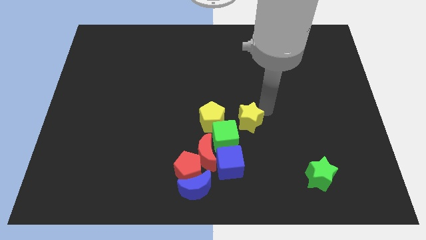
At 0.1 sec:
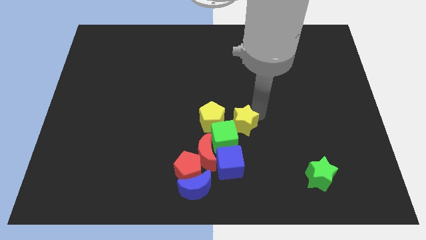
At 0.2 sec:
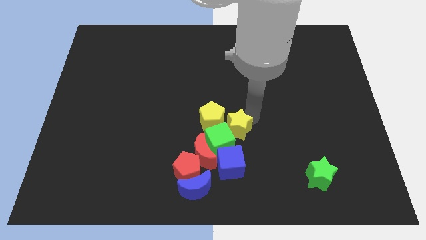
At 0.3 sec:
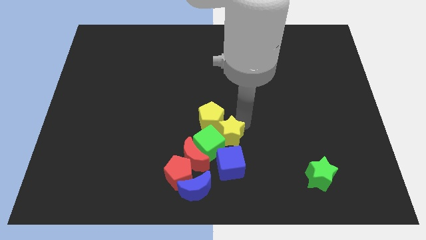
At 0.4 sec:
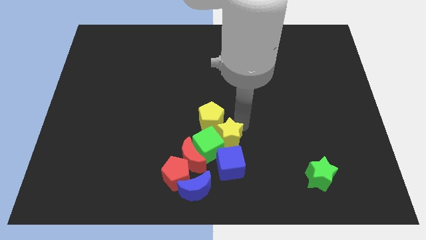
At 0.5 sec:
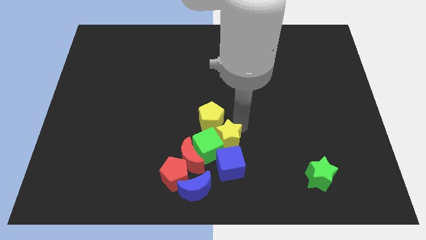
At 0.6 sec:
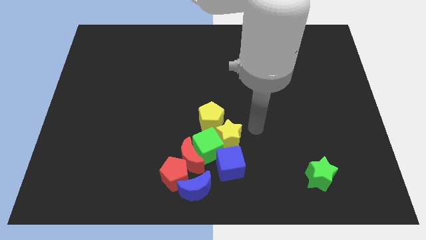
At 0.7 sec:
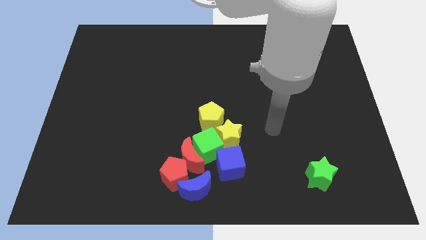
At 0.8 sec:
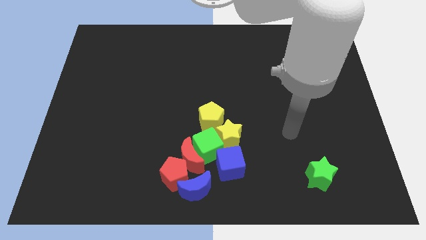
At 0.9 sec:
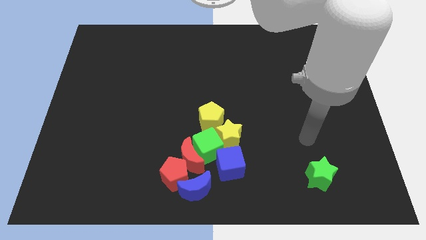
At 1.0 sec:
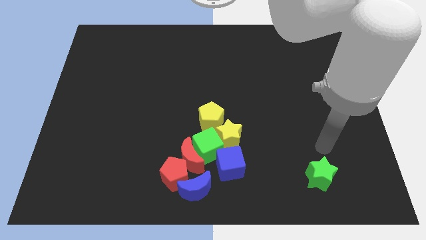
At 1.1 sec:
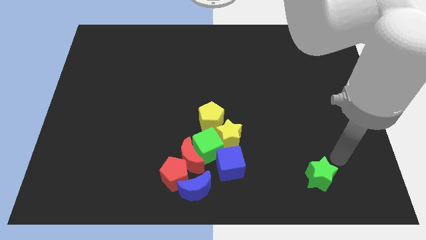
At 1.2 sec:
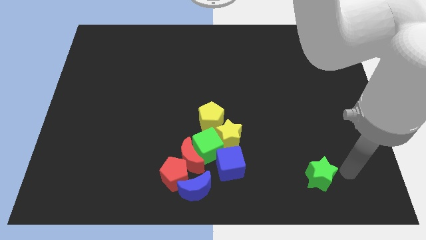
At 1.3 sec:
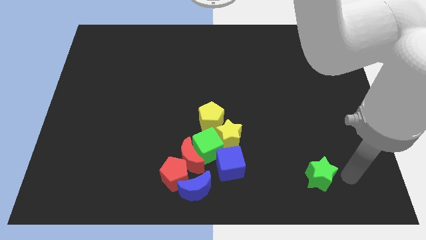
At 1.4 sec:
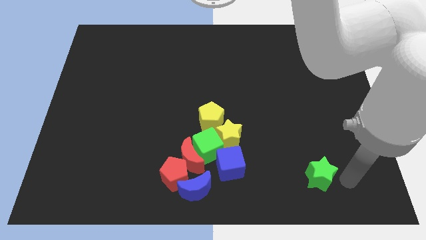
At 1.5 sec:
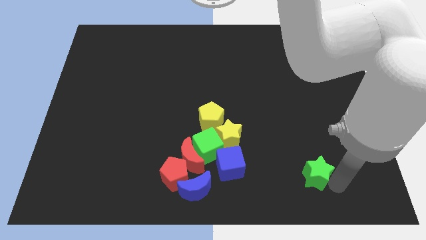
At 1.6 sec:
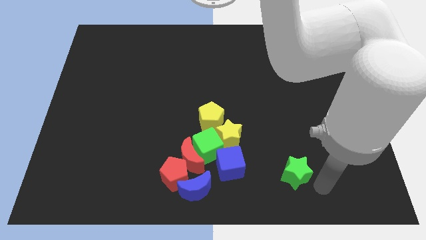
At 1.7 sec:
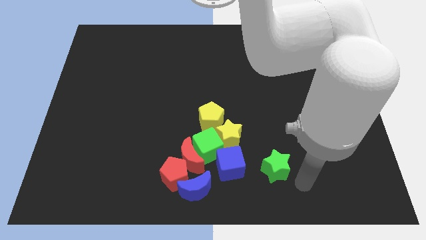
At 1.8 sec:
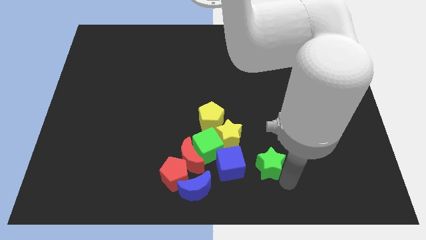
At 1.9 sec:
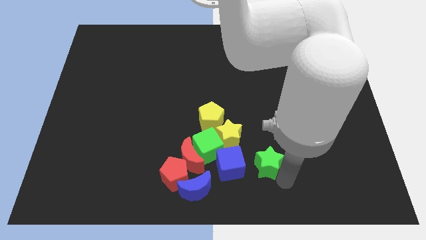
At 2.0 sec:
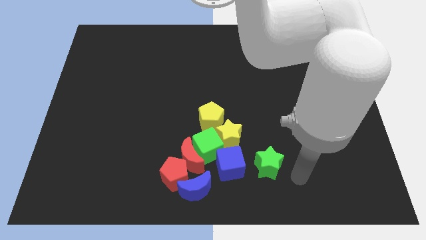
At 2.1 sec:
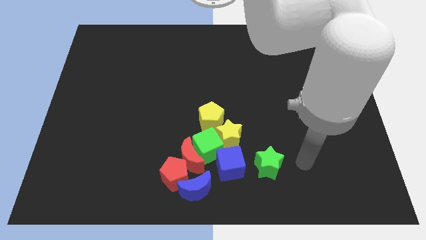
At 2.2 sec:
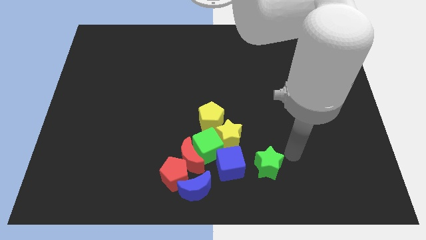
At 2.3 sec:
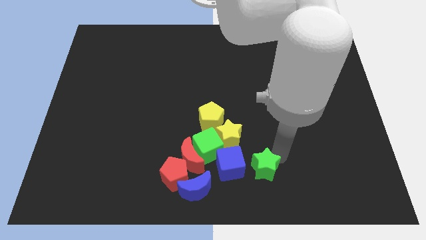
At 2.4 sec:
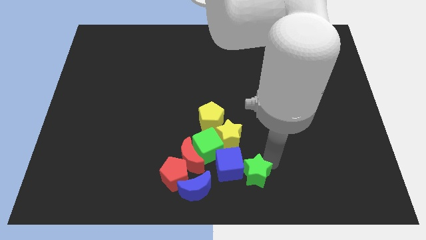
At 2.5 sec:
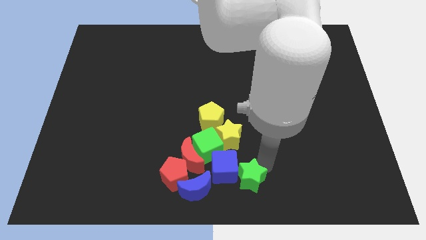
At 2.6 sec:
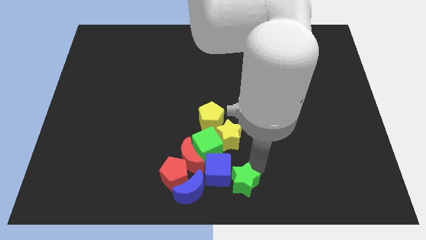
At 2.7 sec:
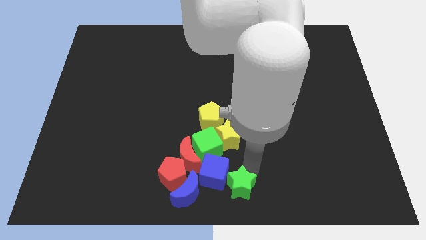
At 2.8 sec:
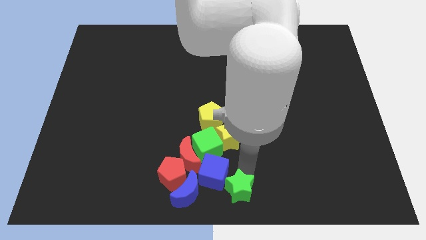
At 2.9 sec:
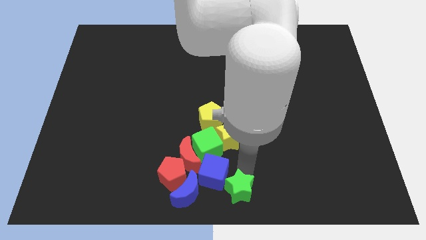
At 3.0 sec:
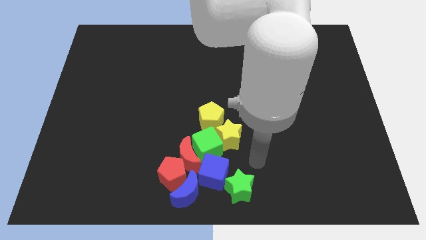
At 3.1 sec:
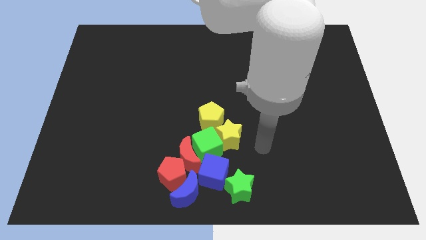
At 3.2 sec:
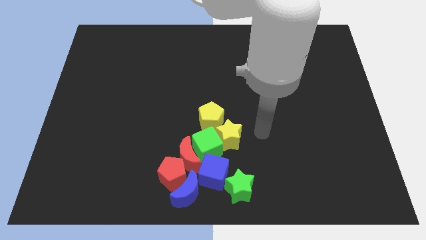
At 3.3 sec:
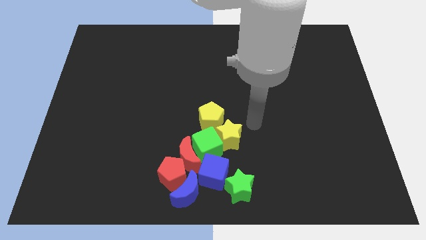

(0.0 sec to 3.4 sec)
move yellow and green star into the cubes

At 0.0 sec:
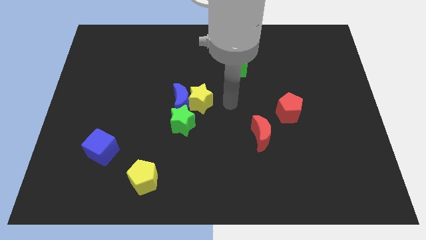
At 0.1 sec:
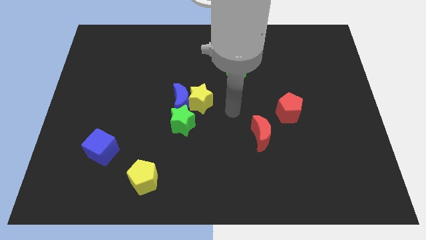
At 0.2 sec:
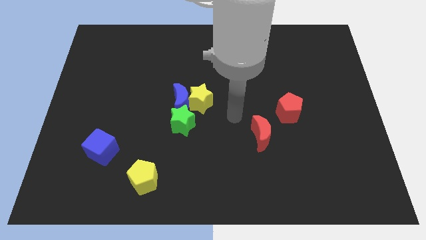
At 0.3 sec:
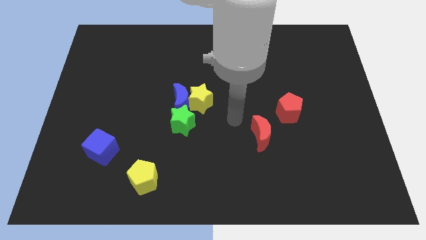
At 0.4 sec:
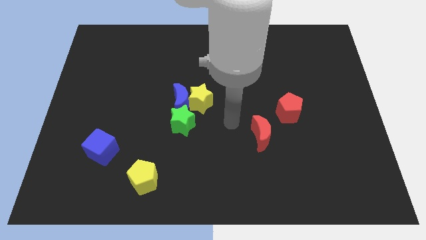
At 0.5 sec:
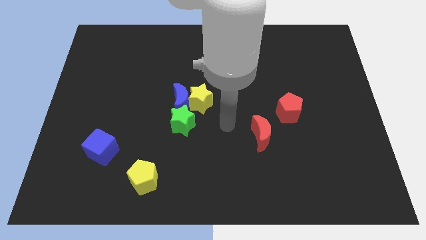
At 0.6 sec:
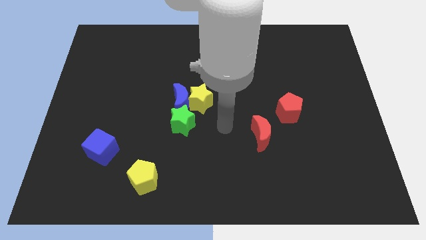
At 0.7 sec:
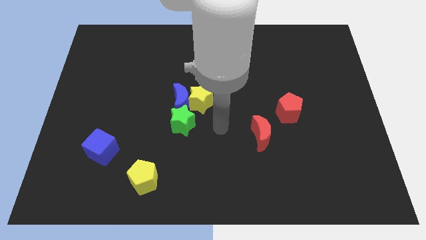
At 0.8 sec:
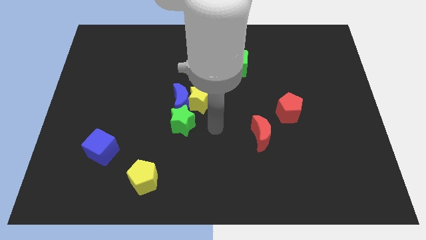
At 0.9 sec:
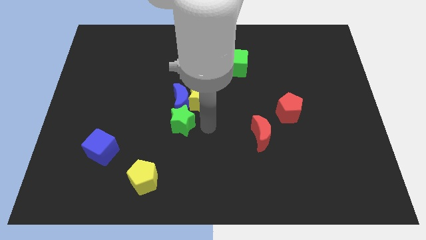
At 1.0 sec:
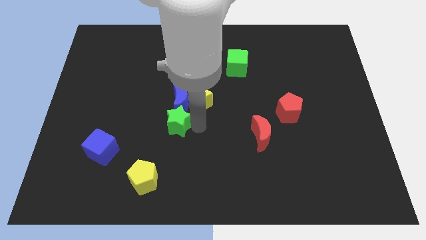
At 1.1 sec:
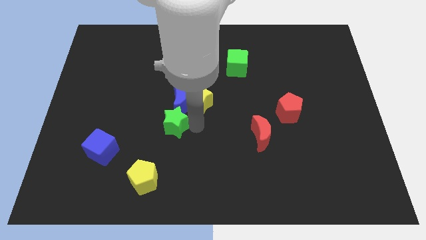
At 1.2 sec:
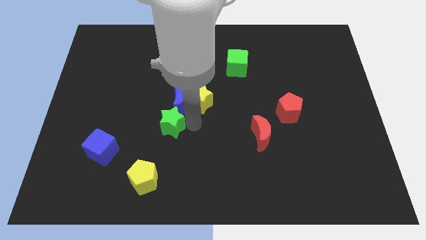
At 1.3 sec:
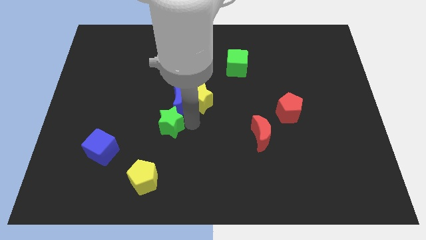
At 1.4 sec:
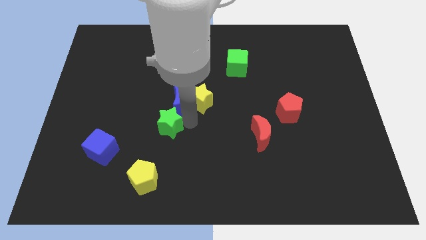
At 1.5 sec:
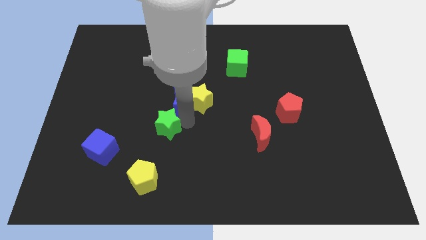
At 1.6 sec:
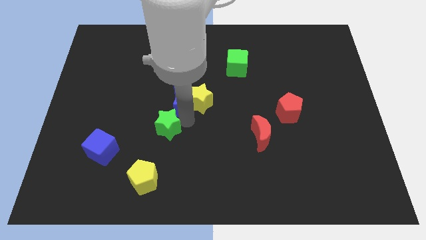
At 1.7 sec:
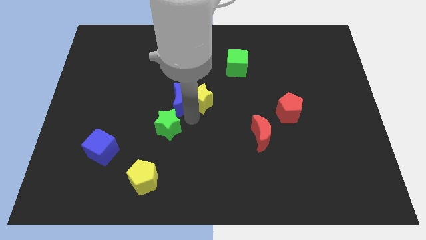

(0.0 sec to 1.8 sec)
push the green star to the bottom left side of the blue crescent

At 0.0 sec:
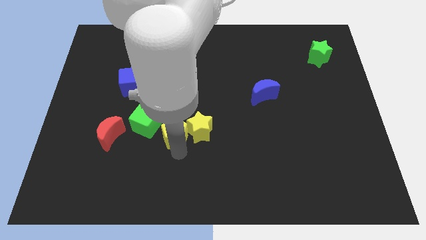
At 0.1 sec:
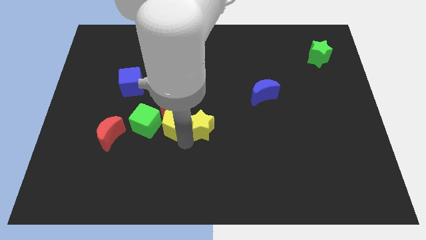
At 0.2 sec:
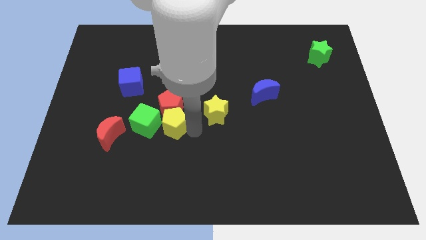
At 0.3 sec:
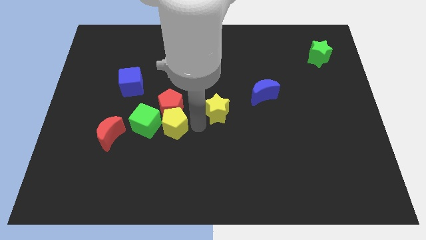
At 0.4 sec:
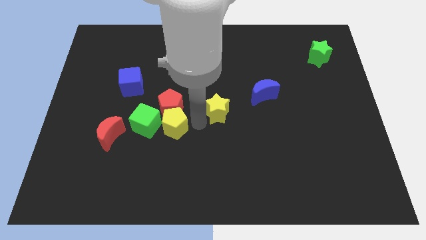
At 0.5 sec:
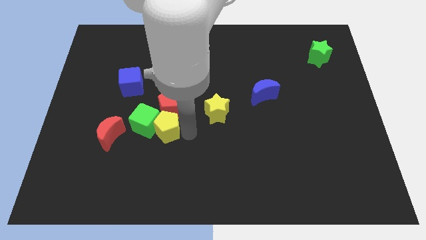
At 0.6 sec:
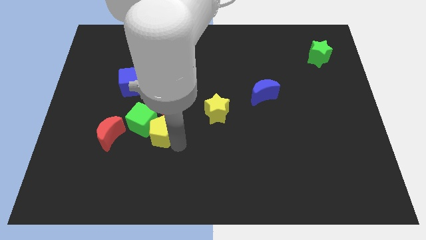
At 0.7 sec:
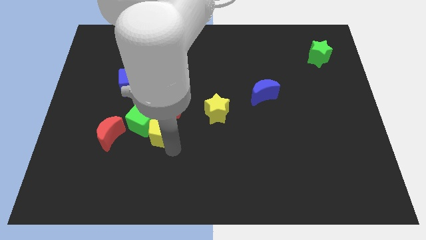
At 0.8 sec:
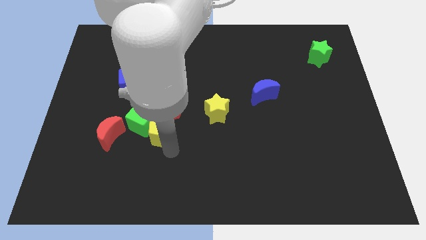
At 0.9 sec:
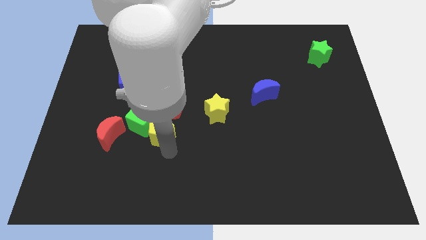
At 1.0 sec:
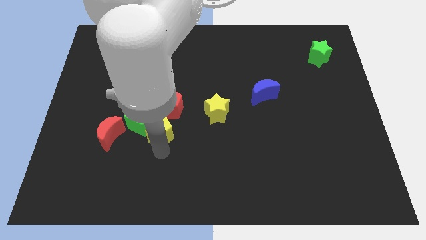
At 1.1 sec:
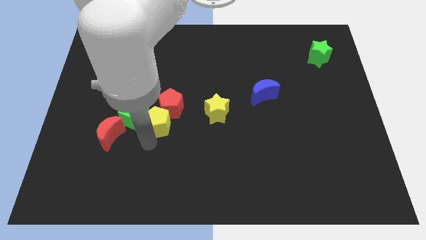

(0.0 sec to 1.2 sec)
separate the yellow star from yellow pentagon

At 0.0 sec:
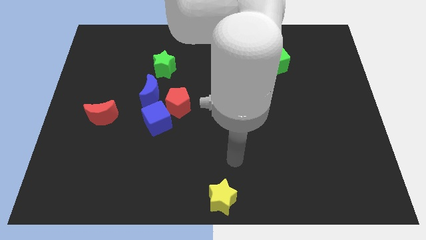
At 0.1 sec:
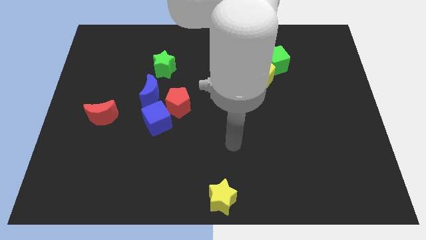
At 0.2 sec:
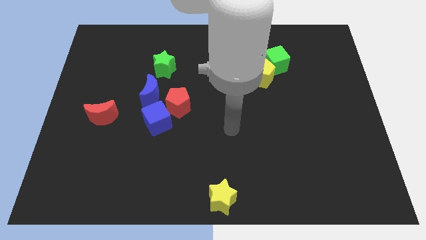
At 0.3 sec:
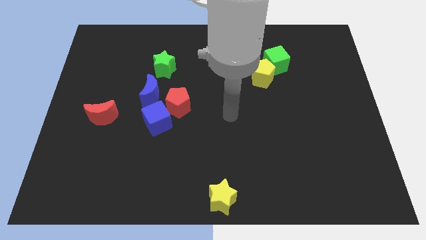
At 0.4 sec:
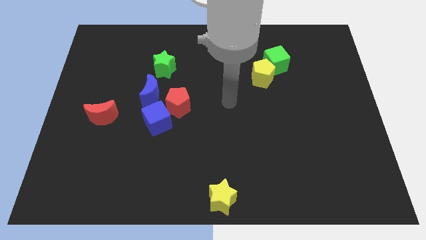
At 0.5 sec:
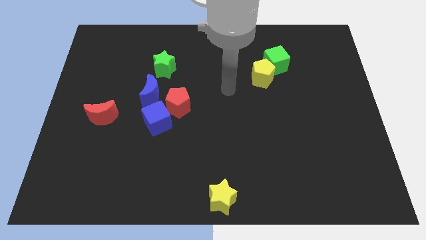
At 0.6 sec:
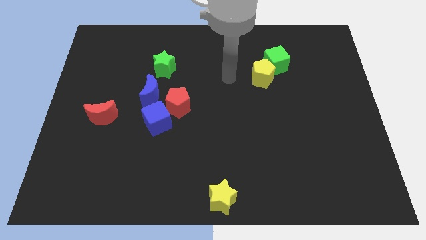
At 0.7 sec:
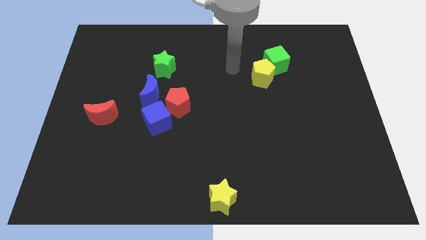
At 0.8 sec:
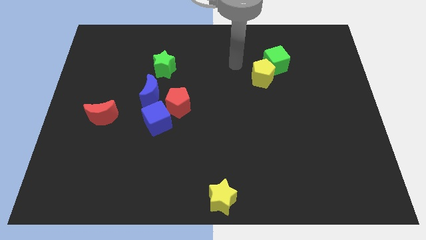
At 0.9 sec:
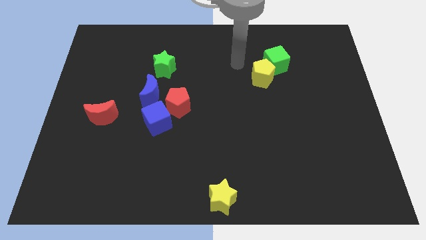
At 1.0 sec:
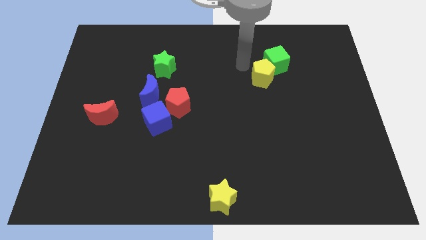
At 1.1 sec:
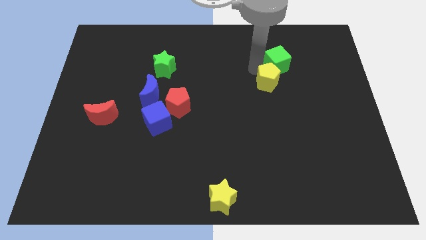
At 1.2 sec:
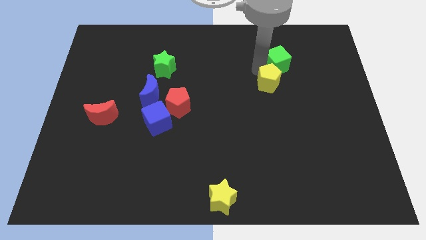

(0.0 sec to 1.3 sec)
move the arm towards the green cube

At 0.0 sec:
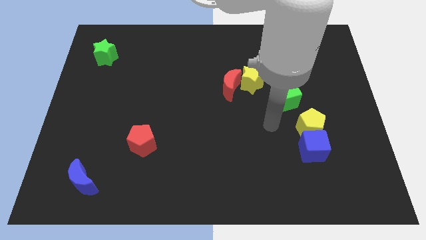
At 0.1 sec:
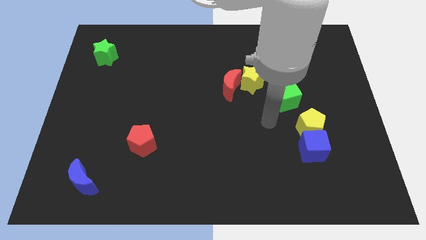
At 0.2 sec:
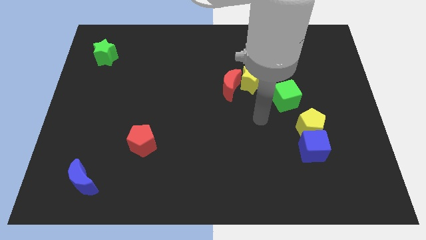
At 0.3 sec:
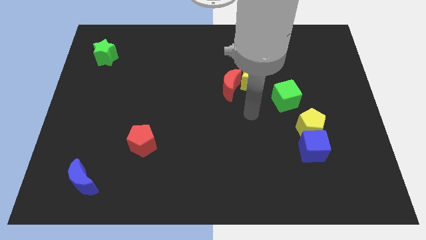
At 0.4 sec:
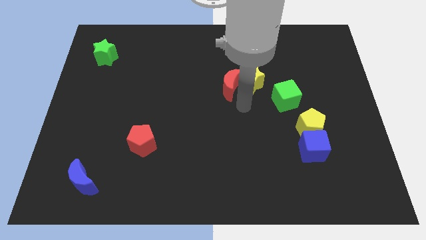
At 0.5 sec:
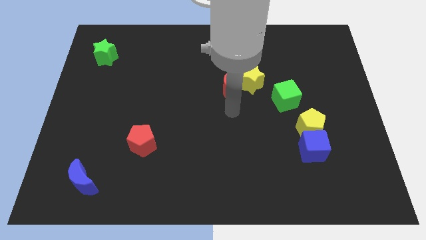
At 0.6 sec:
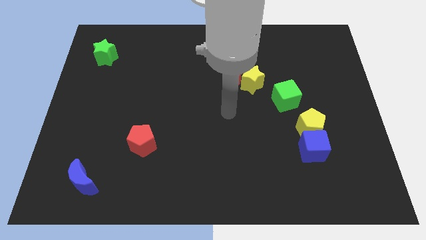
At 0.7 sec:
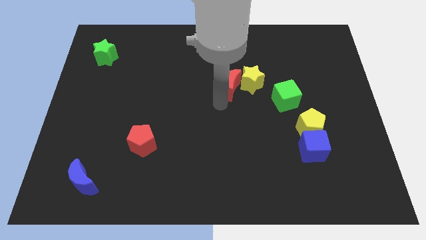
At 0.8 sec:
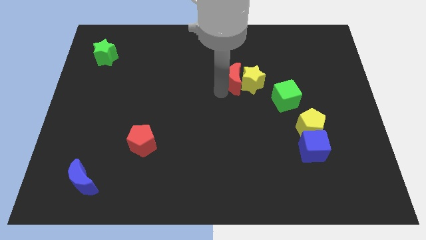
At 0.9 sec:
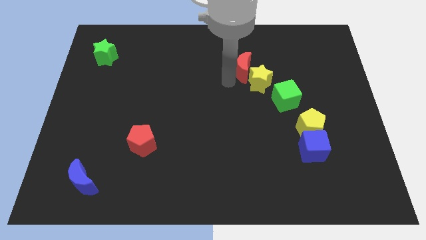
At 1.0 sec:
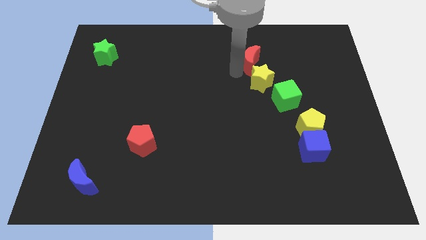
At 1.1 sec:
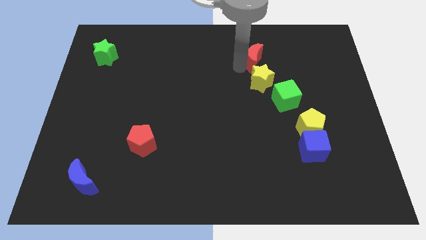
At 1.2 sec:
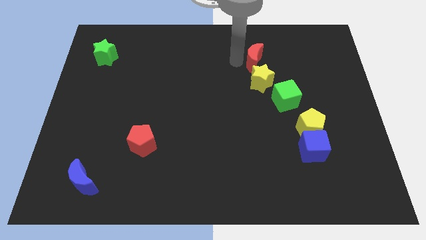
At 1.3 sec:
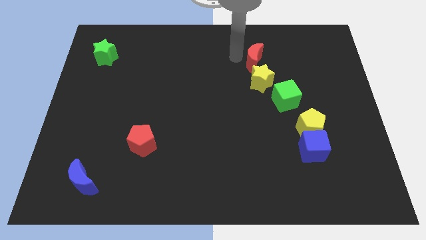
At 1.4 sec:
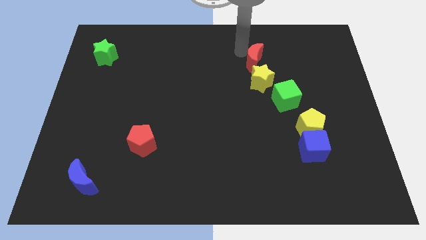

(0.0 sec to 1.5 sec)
place red moon above the yellow star
